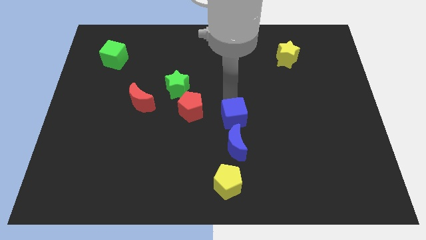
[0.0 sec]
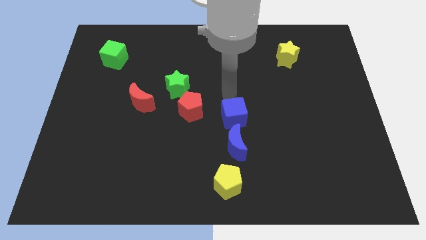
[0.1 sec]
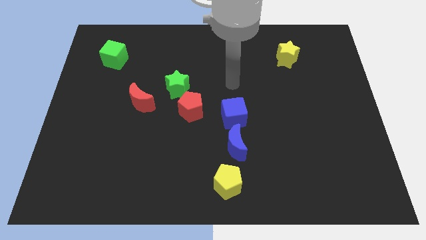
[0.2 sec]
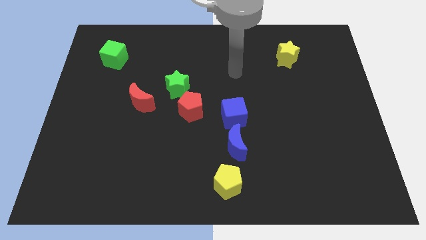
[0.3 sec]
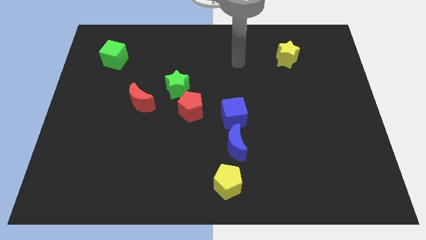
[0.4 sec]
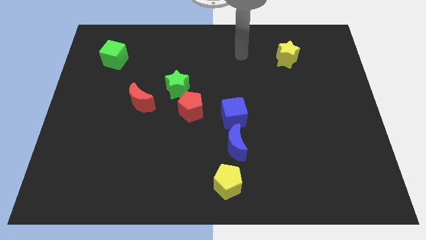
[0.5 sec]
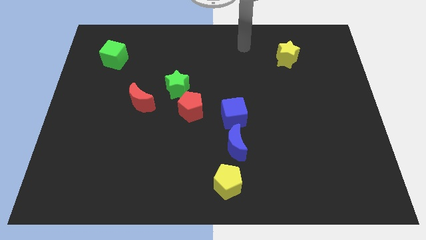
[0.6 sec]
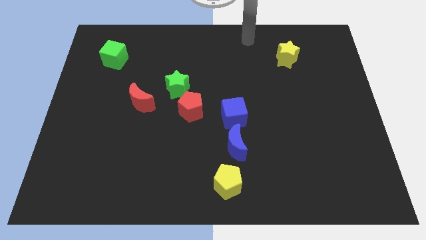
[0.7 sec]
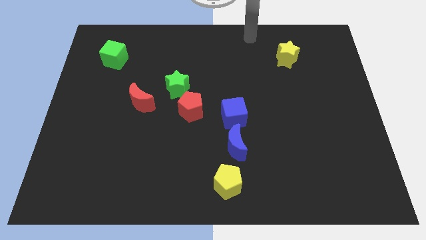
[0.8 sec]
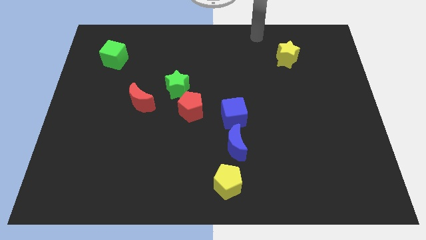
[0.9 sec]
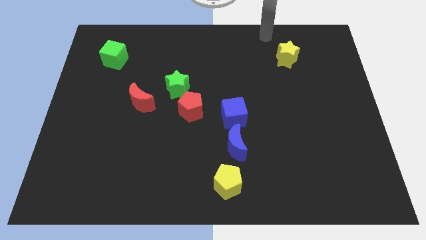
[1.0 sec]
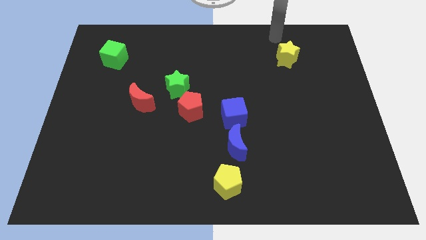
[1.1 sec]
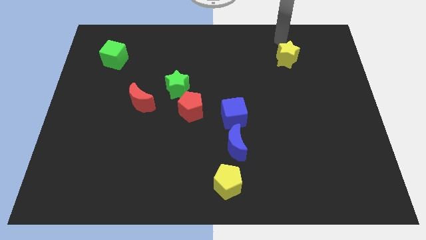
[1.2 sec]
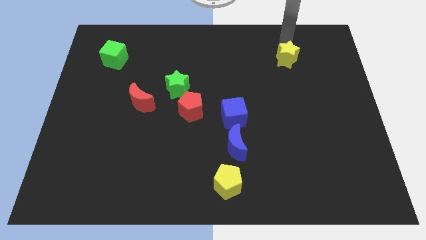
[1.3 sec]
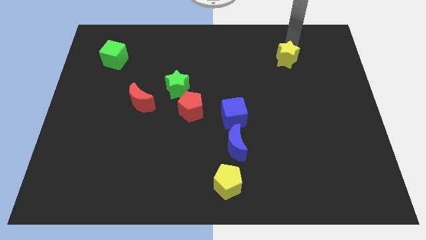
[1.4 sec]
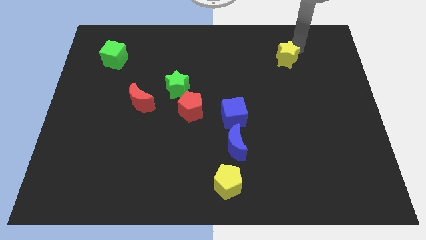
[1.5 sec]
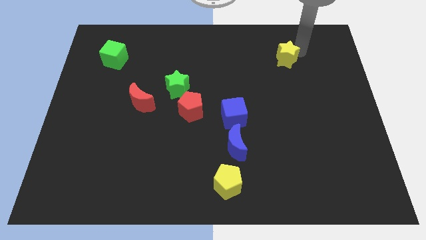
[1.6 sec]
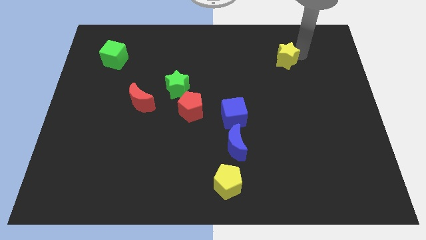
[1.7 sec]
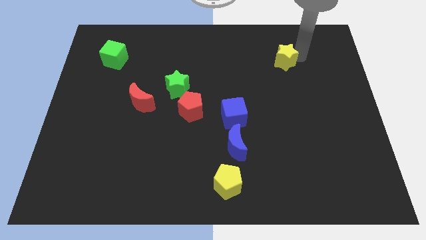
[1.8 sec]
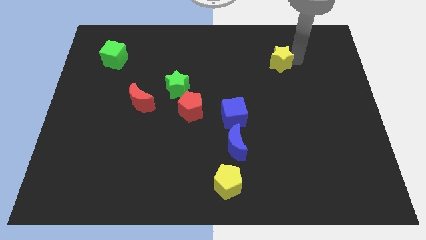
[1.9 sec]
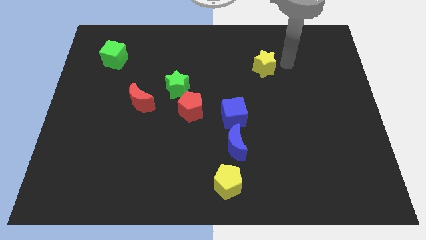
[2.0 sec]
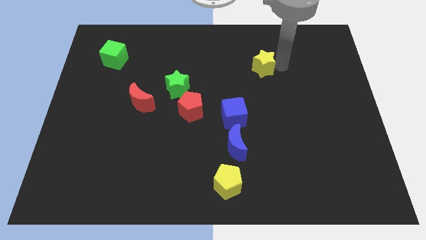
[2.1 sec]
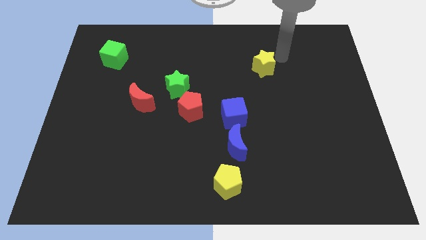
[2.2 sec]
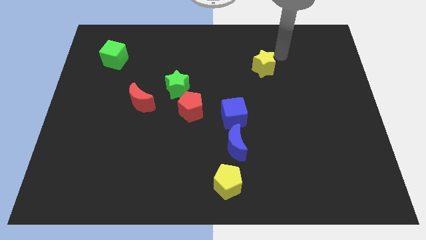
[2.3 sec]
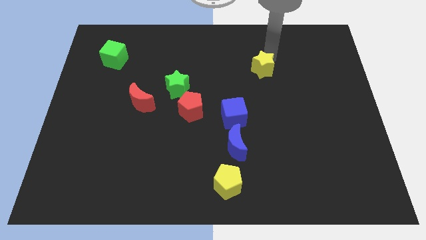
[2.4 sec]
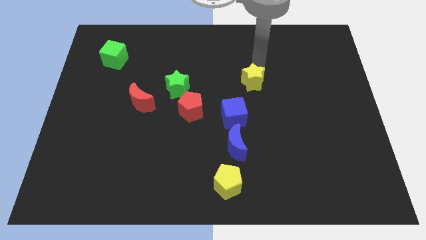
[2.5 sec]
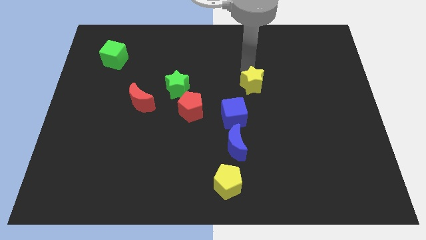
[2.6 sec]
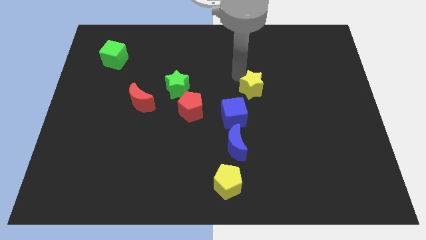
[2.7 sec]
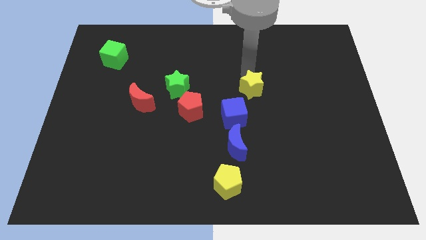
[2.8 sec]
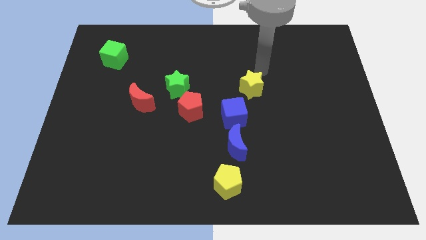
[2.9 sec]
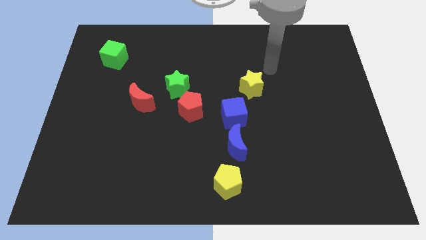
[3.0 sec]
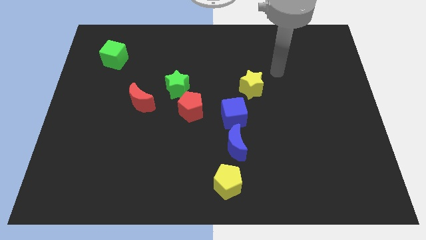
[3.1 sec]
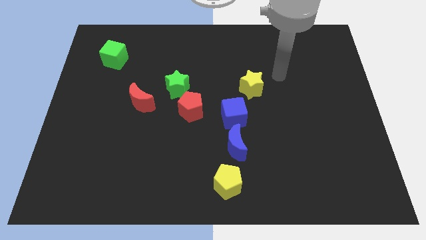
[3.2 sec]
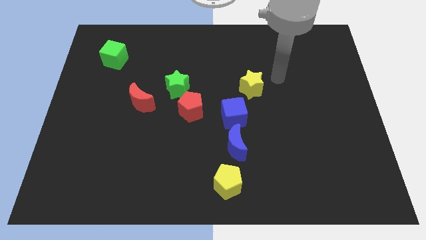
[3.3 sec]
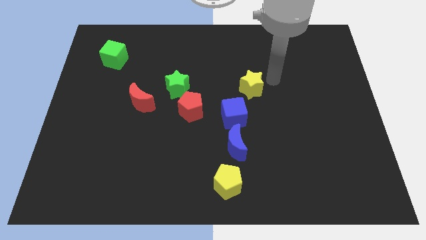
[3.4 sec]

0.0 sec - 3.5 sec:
drag the yellow star parallel to the green star

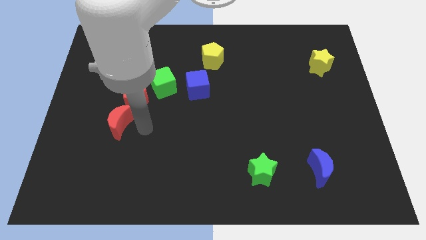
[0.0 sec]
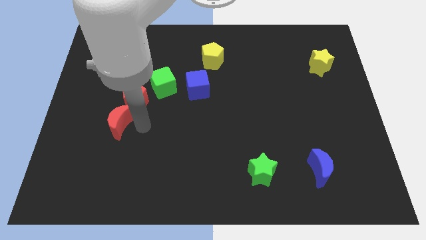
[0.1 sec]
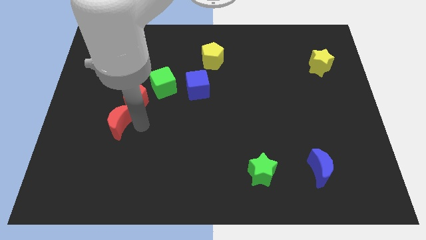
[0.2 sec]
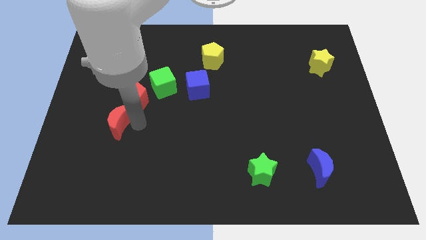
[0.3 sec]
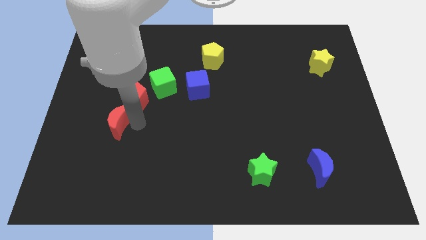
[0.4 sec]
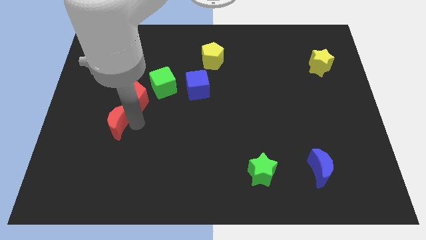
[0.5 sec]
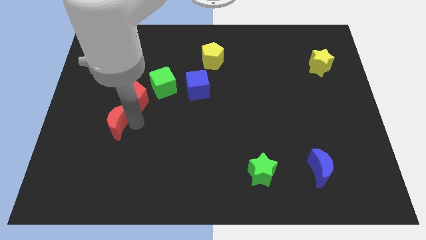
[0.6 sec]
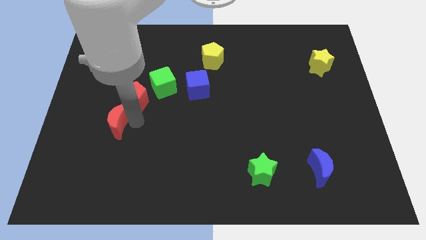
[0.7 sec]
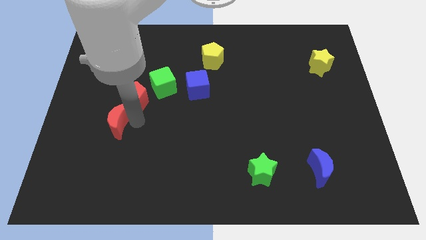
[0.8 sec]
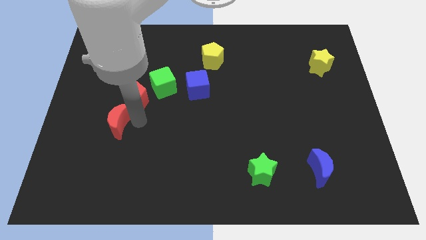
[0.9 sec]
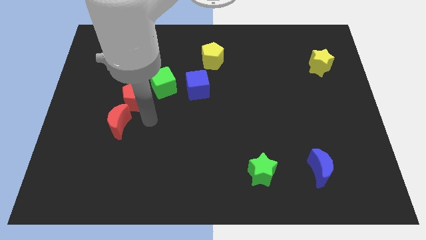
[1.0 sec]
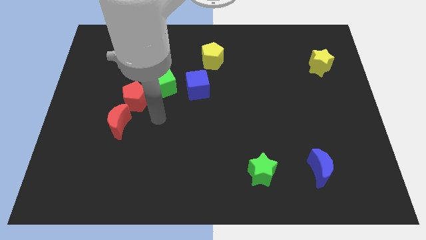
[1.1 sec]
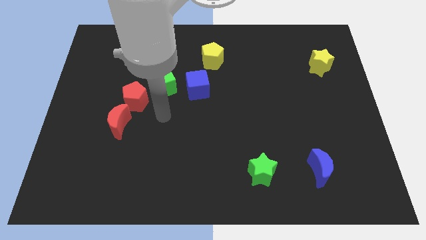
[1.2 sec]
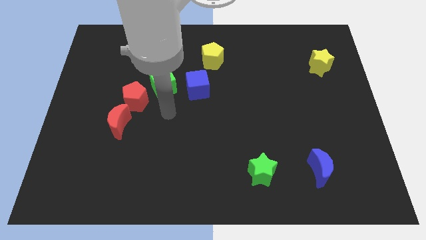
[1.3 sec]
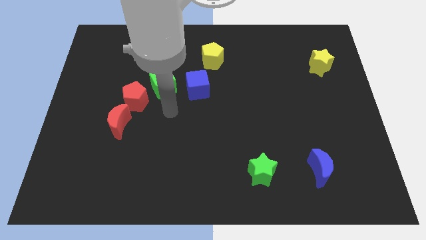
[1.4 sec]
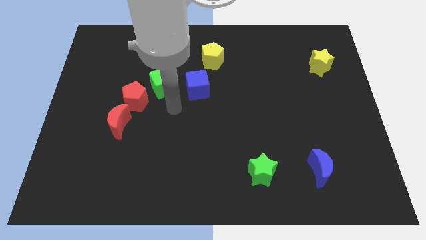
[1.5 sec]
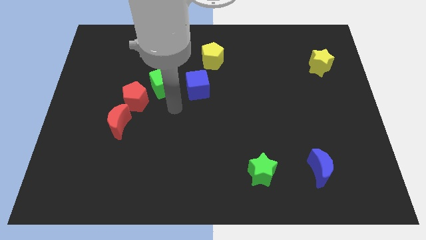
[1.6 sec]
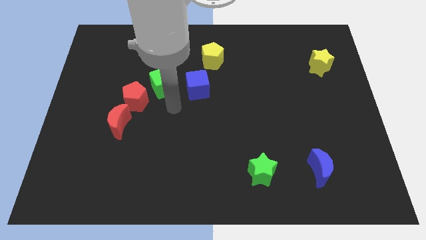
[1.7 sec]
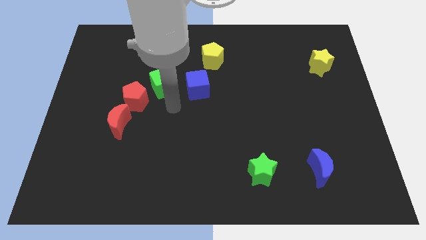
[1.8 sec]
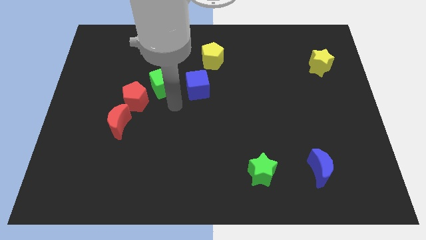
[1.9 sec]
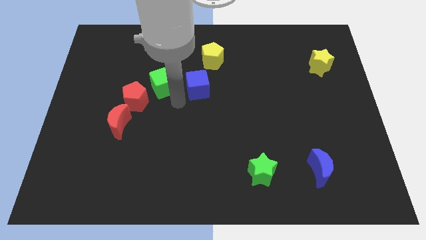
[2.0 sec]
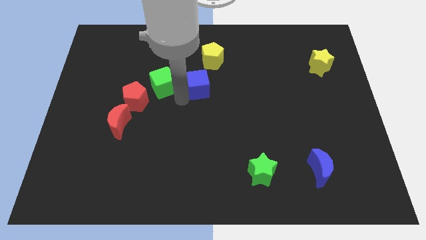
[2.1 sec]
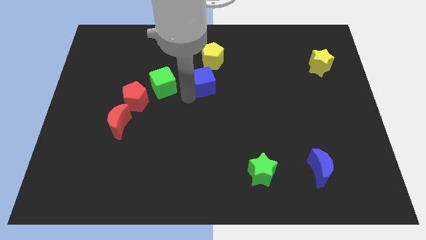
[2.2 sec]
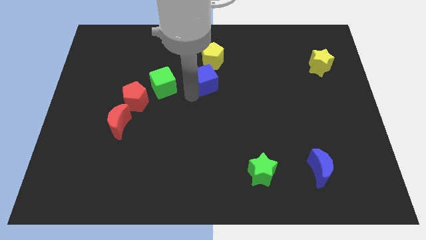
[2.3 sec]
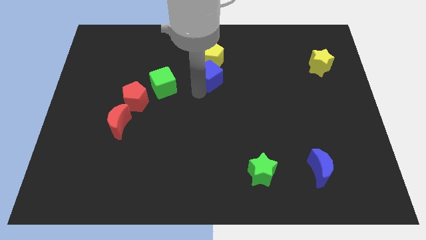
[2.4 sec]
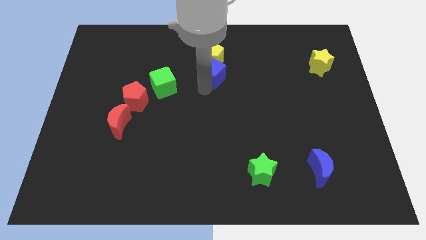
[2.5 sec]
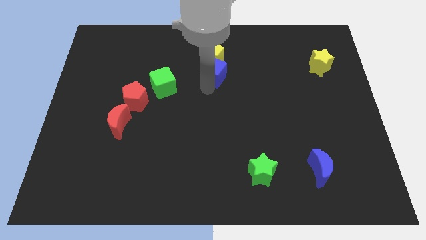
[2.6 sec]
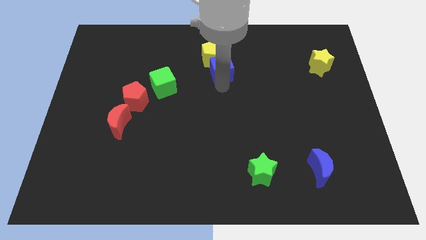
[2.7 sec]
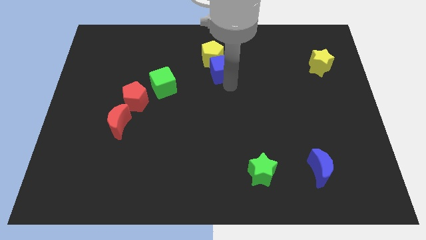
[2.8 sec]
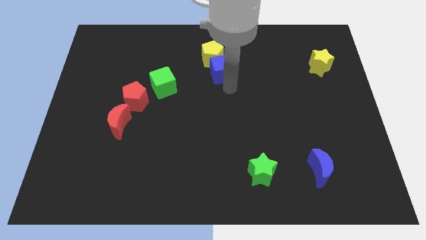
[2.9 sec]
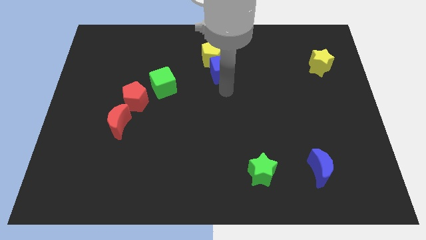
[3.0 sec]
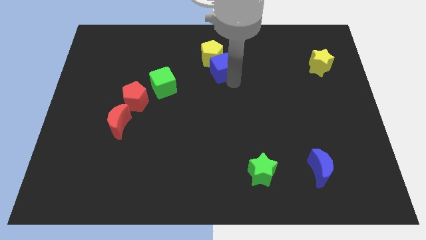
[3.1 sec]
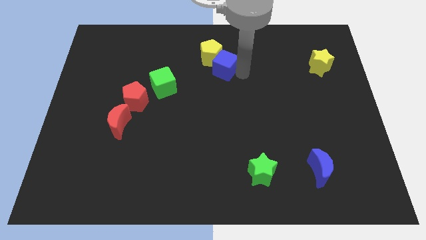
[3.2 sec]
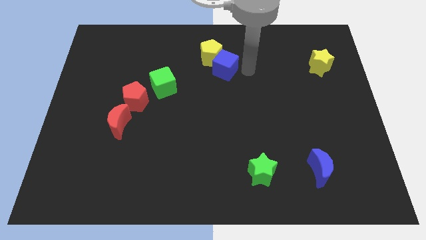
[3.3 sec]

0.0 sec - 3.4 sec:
push the blue cube into the yellow pentagon

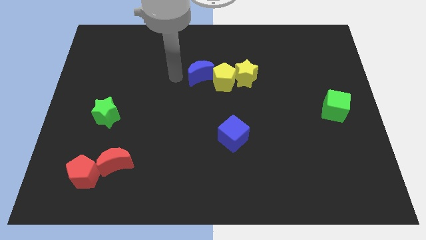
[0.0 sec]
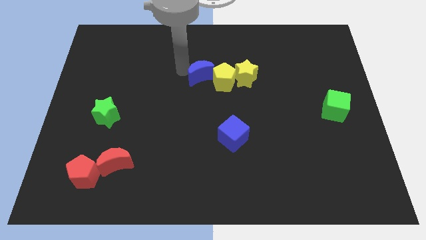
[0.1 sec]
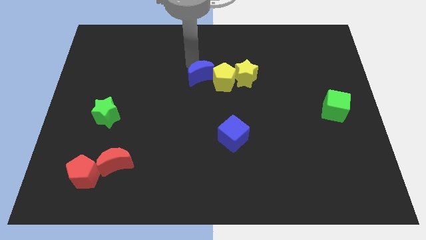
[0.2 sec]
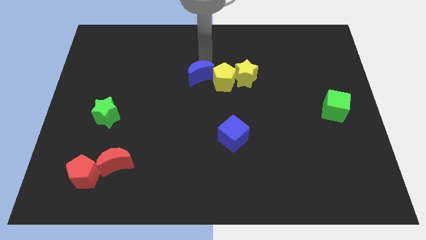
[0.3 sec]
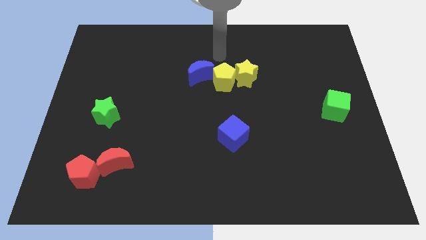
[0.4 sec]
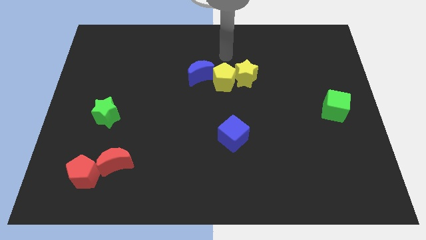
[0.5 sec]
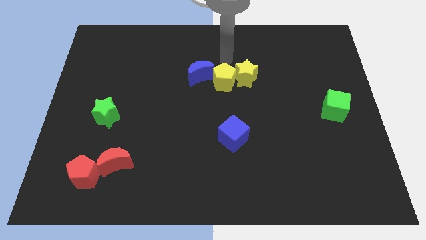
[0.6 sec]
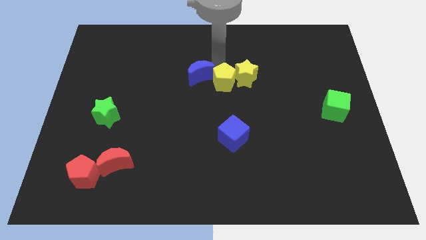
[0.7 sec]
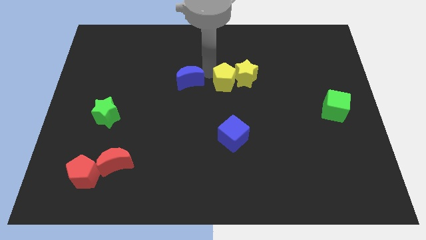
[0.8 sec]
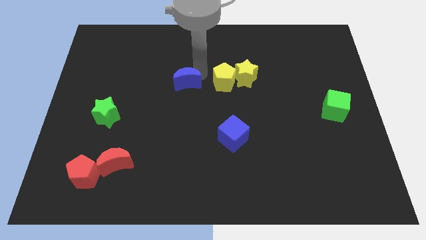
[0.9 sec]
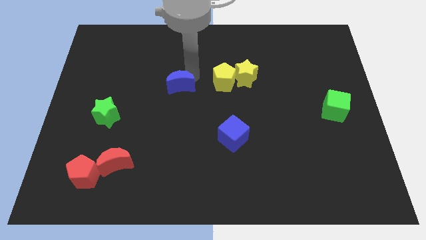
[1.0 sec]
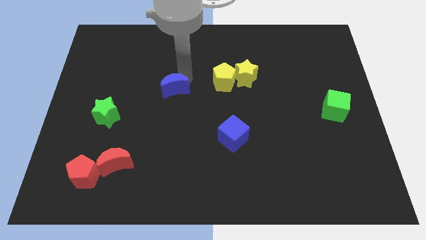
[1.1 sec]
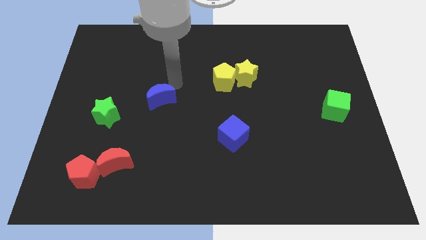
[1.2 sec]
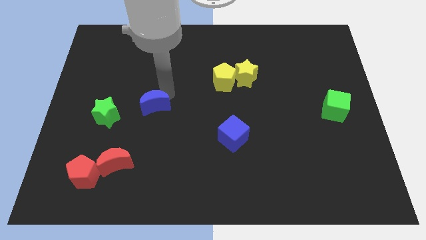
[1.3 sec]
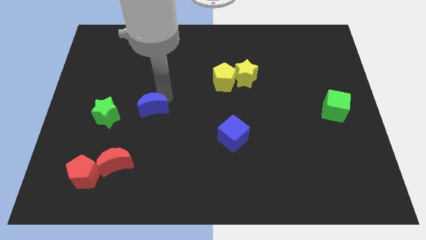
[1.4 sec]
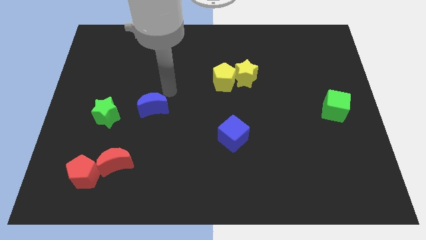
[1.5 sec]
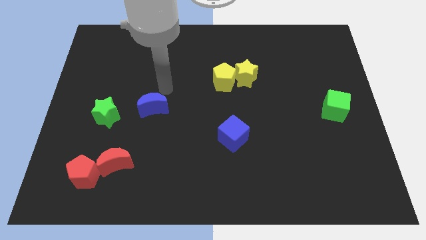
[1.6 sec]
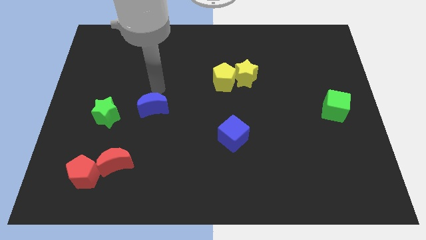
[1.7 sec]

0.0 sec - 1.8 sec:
move the blue moon towards red blocks

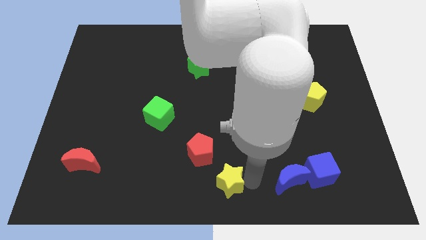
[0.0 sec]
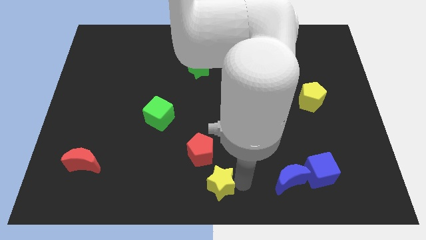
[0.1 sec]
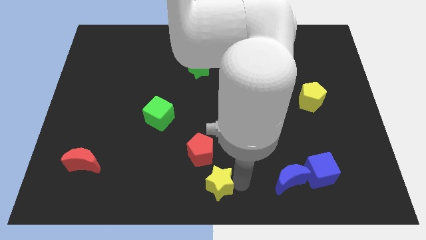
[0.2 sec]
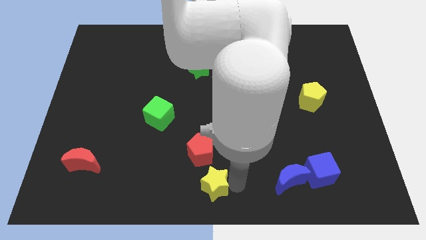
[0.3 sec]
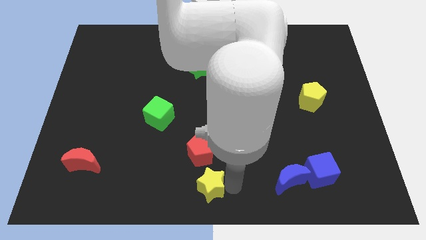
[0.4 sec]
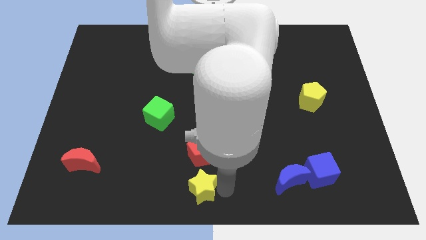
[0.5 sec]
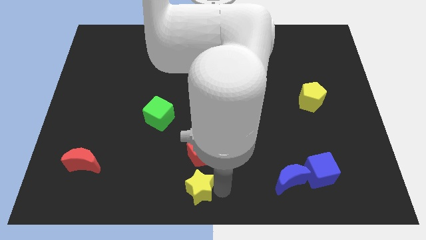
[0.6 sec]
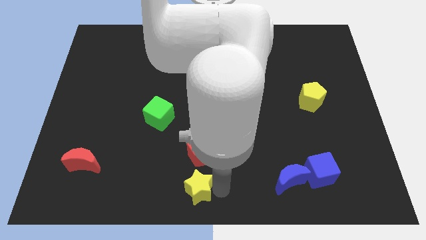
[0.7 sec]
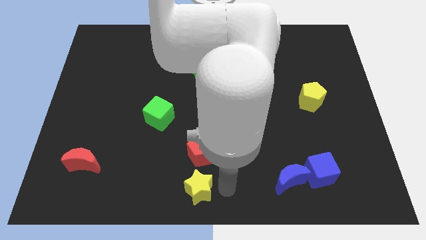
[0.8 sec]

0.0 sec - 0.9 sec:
push the yellow star to the bottom center on the board
